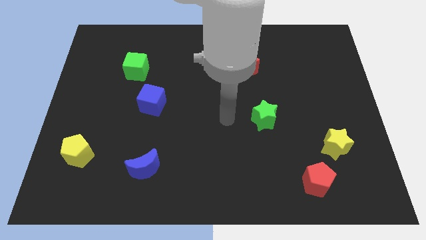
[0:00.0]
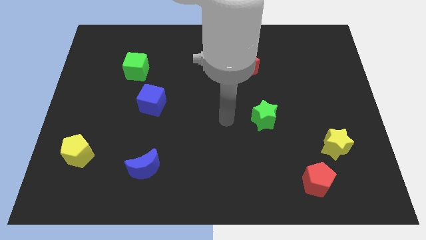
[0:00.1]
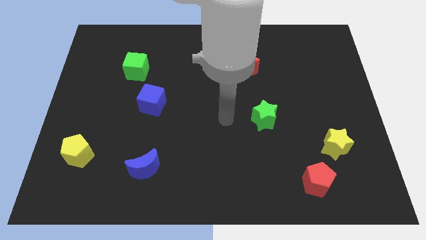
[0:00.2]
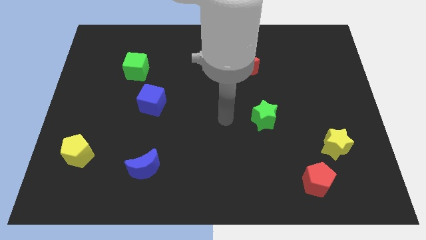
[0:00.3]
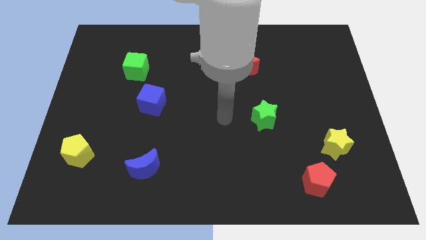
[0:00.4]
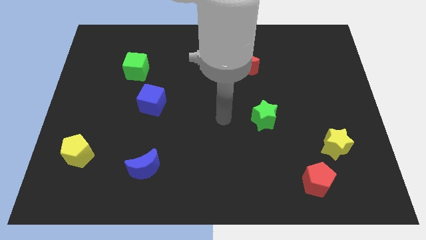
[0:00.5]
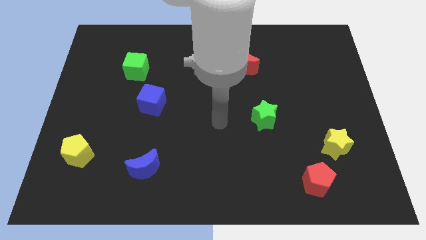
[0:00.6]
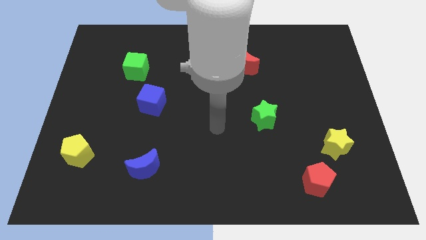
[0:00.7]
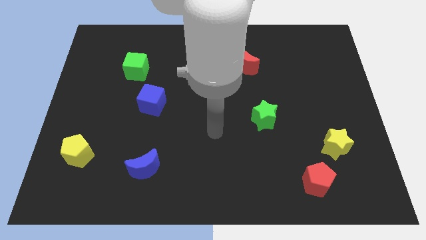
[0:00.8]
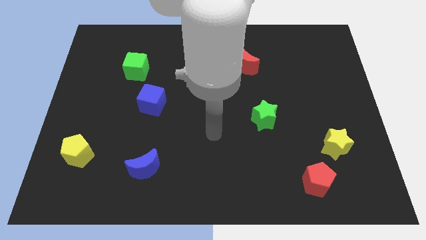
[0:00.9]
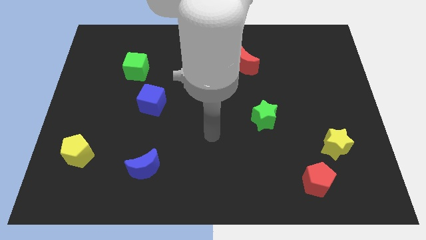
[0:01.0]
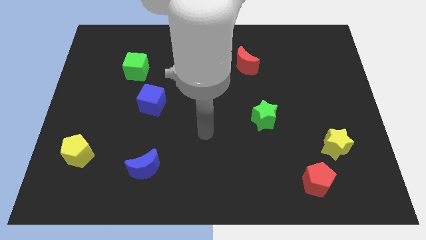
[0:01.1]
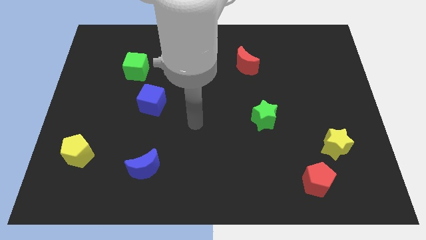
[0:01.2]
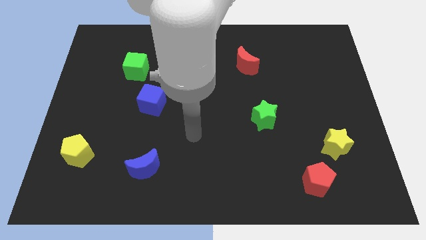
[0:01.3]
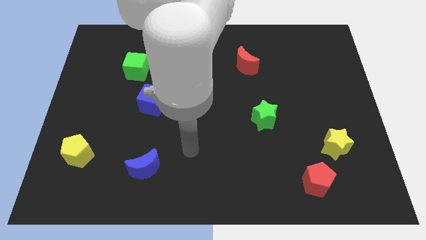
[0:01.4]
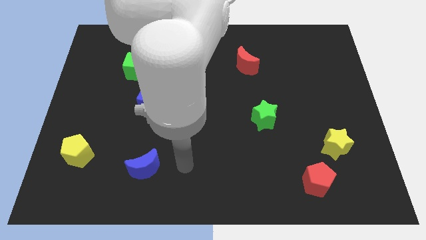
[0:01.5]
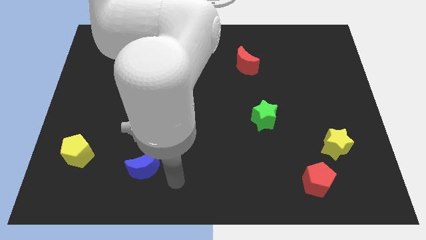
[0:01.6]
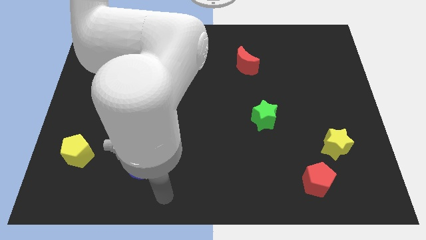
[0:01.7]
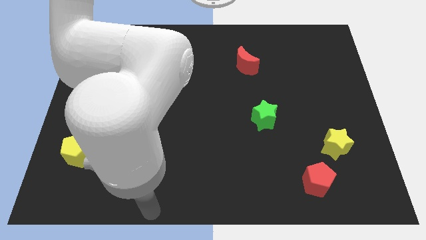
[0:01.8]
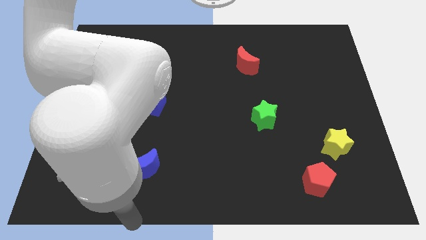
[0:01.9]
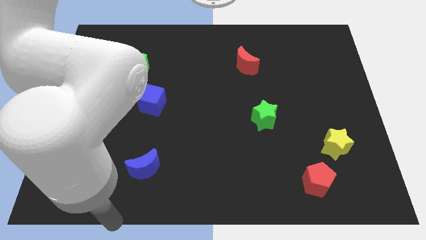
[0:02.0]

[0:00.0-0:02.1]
place your hand below the blue cube

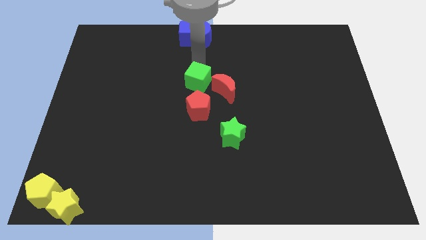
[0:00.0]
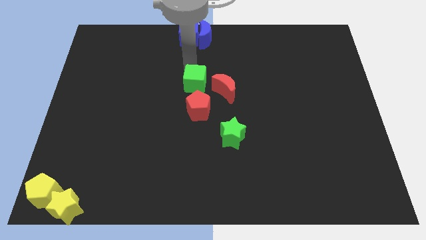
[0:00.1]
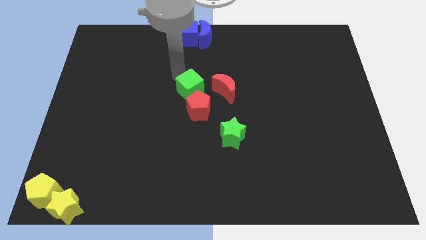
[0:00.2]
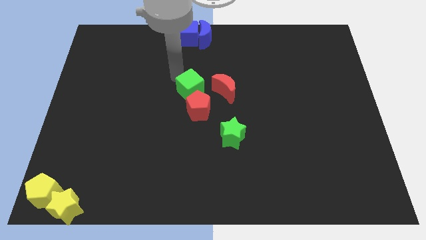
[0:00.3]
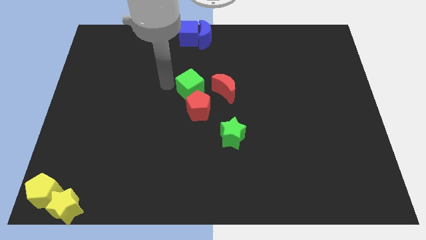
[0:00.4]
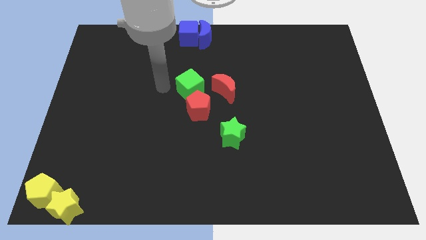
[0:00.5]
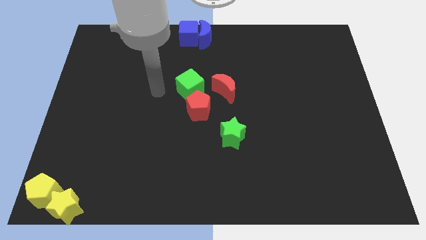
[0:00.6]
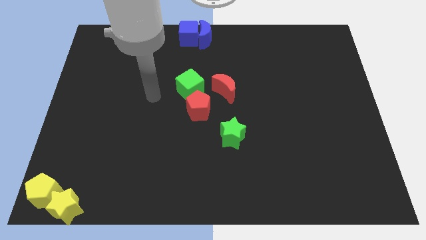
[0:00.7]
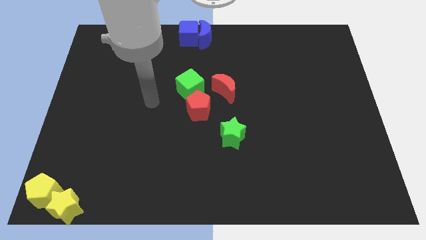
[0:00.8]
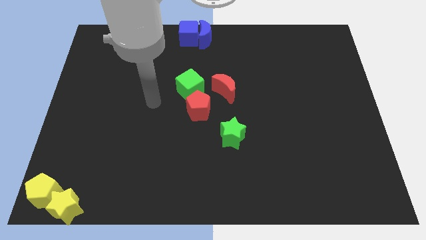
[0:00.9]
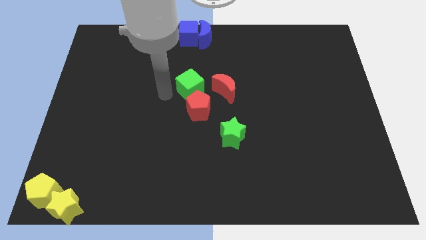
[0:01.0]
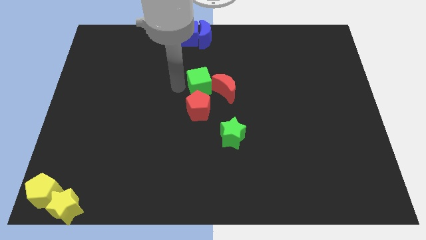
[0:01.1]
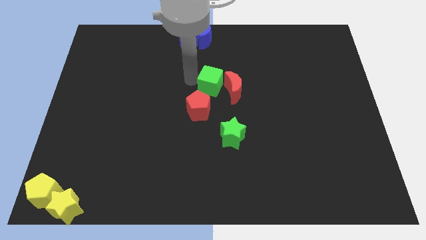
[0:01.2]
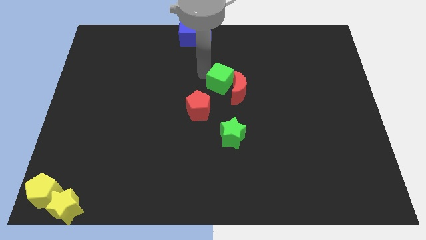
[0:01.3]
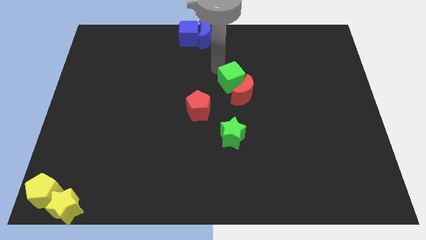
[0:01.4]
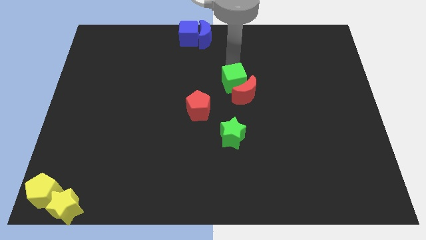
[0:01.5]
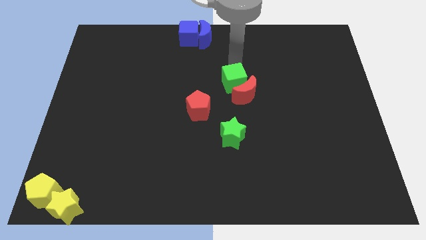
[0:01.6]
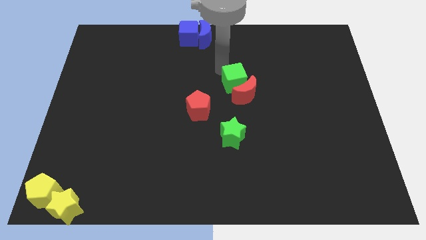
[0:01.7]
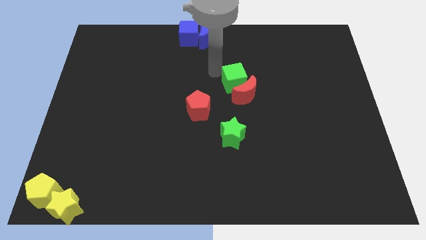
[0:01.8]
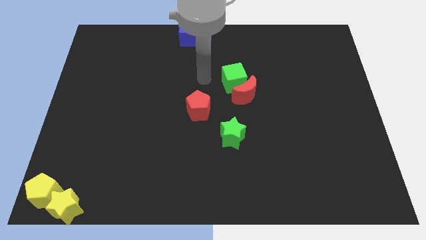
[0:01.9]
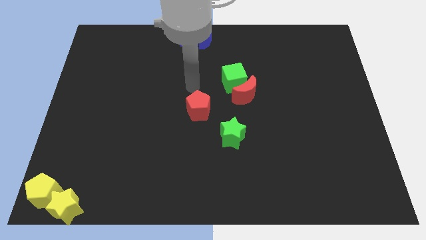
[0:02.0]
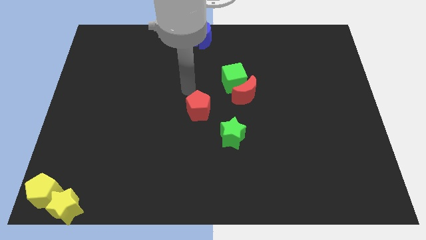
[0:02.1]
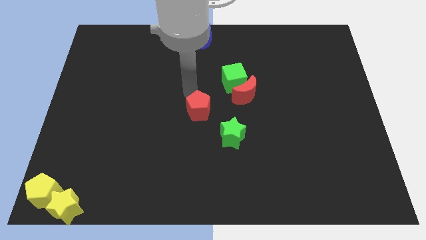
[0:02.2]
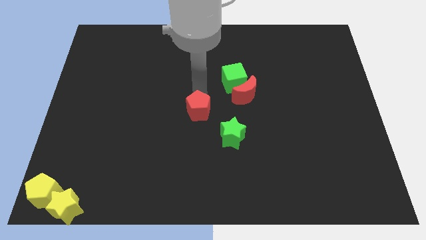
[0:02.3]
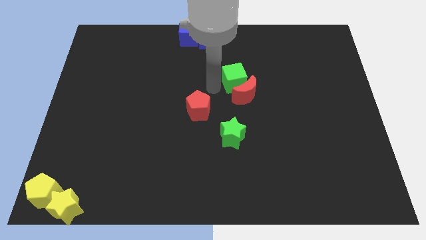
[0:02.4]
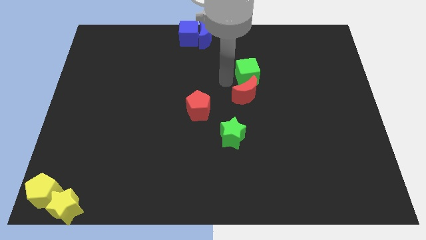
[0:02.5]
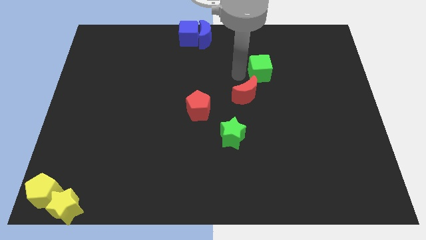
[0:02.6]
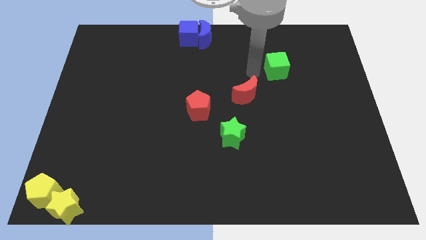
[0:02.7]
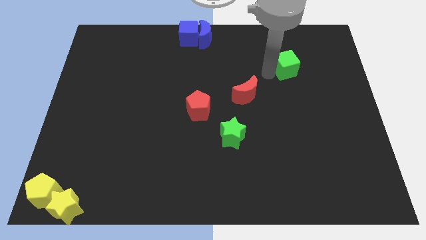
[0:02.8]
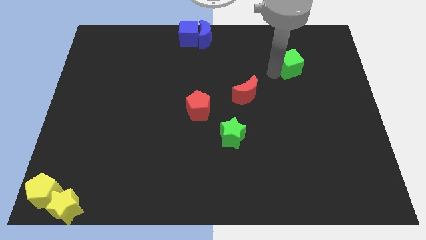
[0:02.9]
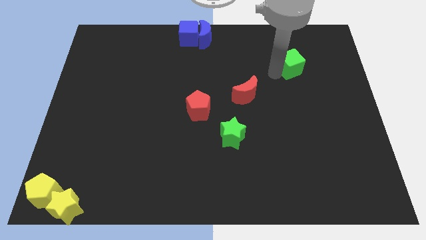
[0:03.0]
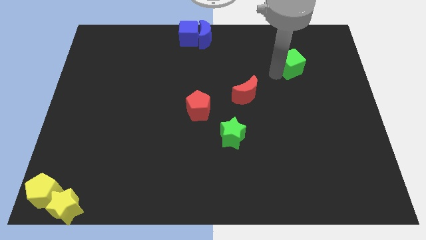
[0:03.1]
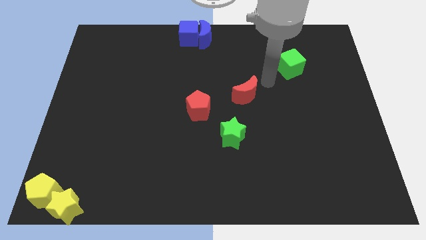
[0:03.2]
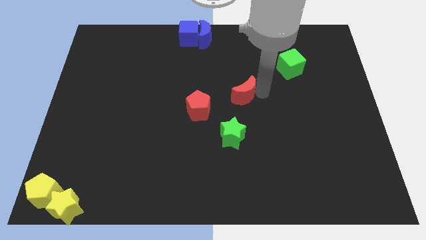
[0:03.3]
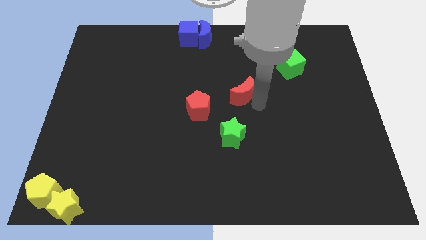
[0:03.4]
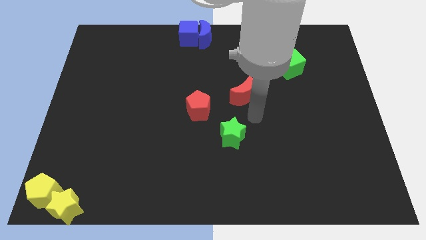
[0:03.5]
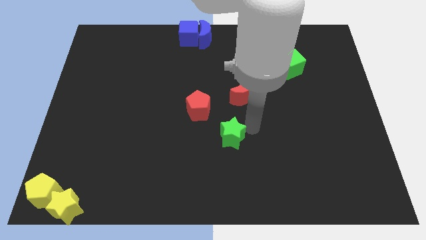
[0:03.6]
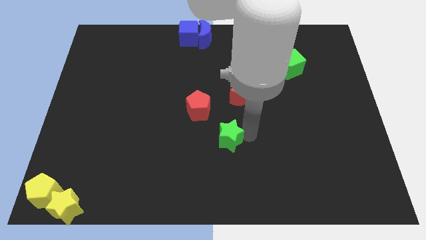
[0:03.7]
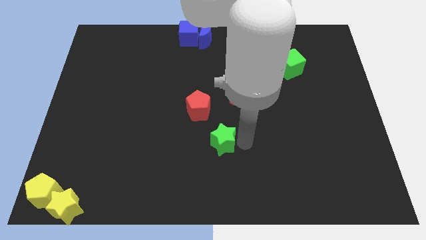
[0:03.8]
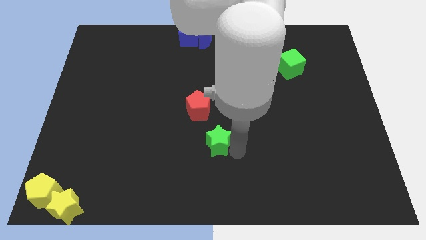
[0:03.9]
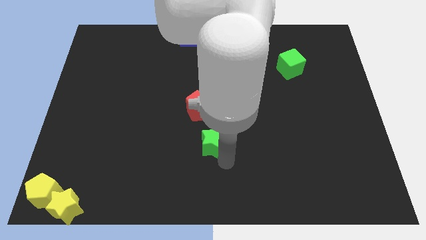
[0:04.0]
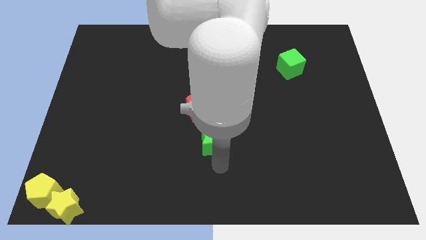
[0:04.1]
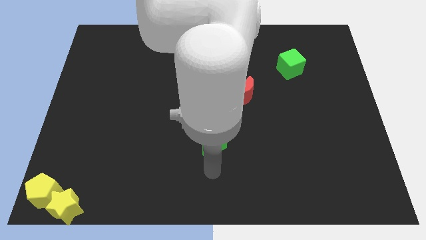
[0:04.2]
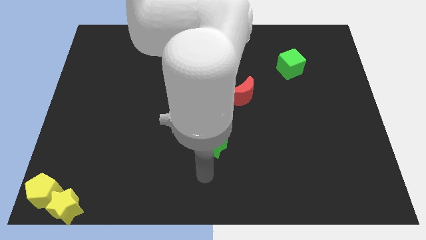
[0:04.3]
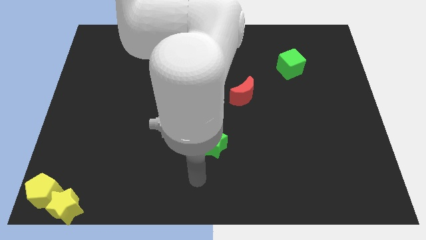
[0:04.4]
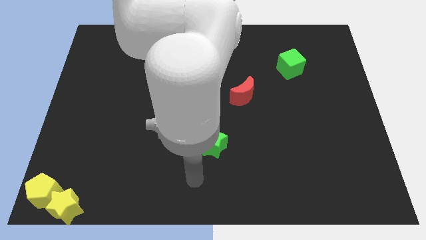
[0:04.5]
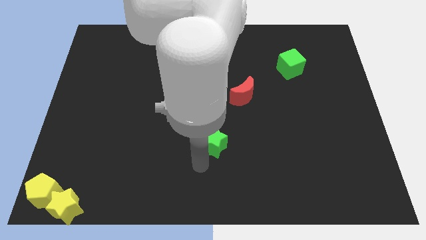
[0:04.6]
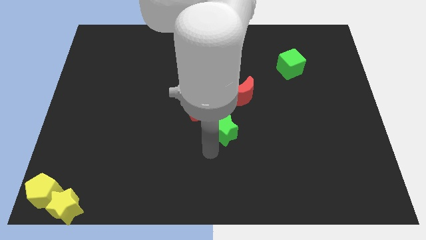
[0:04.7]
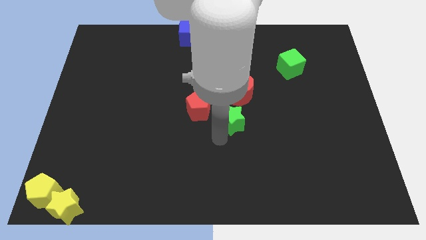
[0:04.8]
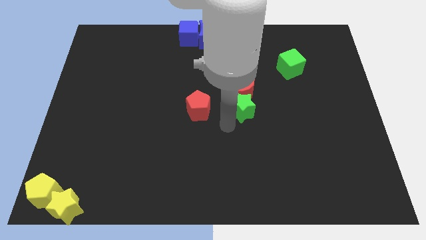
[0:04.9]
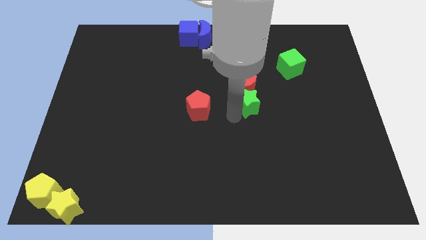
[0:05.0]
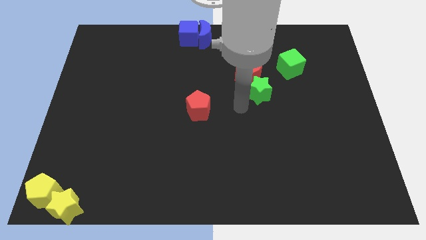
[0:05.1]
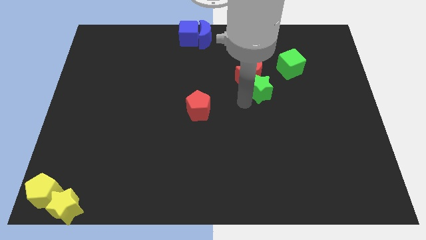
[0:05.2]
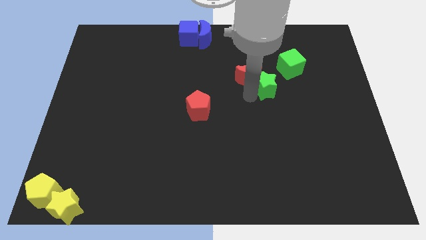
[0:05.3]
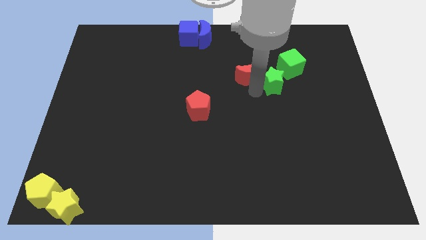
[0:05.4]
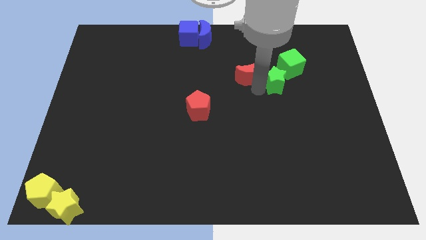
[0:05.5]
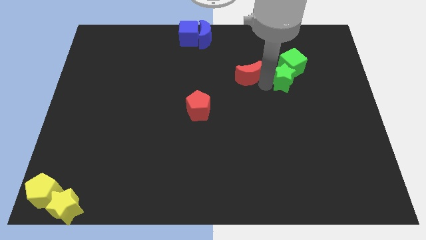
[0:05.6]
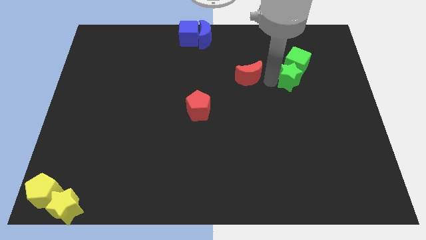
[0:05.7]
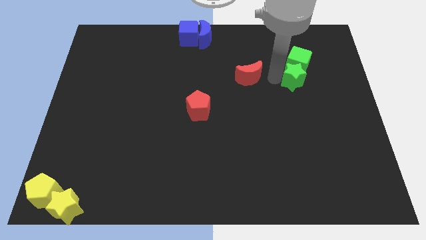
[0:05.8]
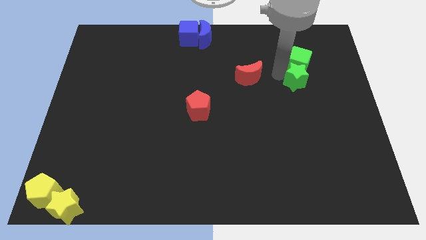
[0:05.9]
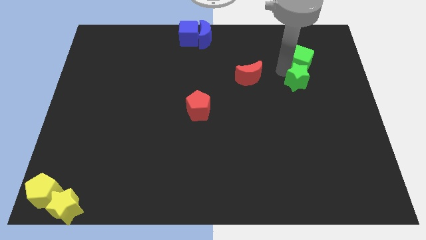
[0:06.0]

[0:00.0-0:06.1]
push green star into green cube to thee top right

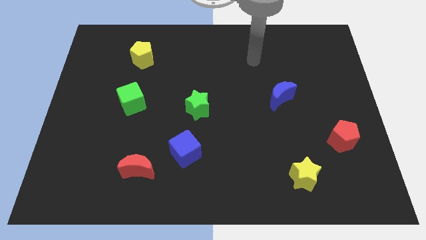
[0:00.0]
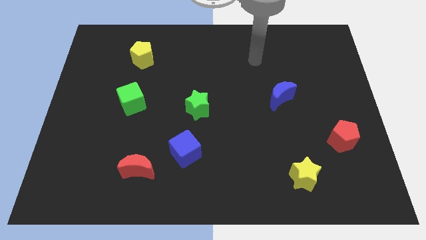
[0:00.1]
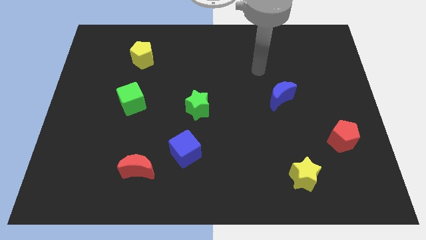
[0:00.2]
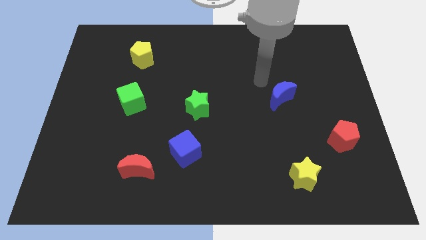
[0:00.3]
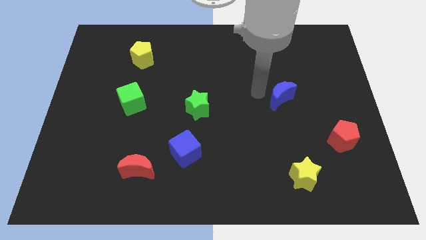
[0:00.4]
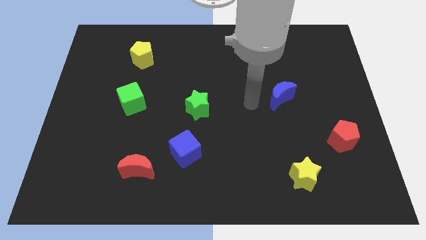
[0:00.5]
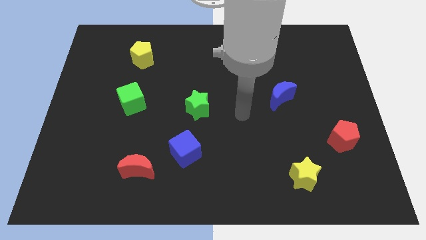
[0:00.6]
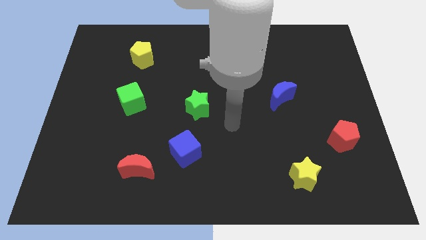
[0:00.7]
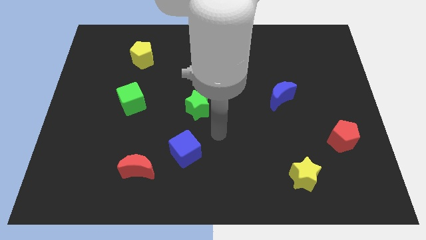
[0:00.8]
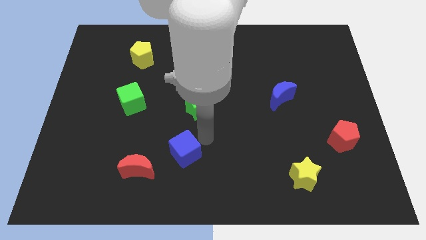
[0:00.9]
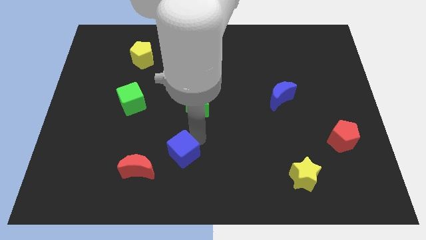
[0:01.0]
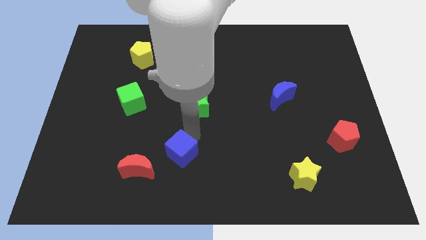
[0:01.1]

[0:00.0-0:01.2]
tap the blue cube
